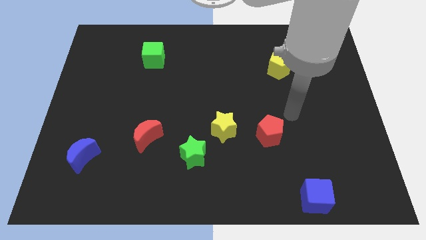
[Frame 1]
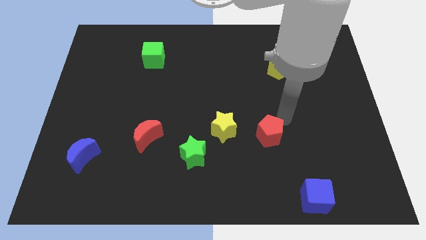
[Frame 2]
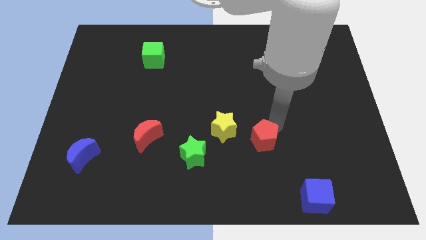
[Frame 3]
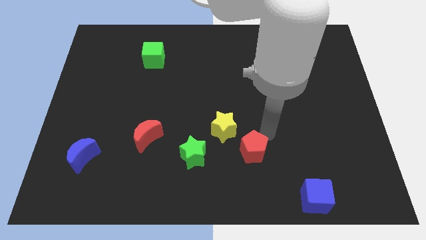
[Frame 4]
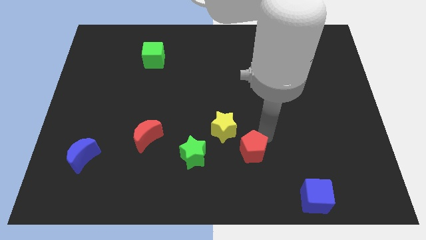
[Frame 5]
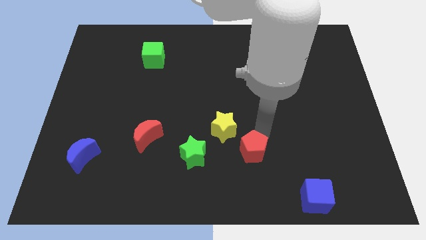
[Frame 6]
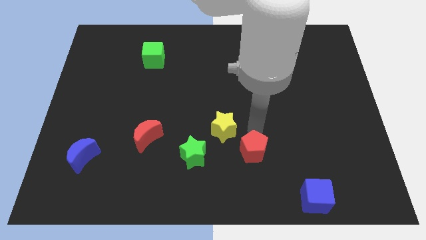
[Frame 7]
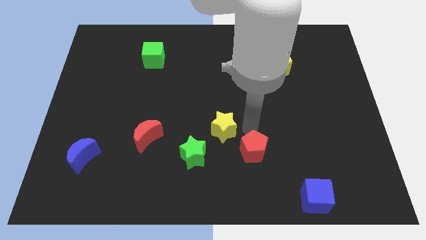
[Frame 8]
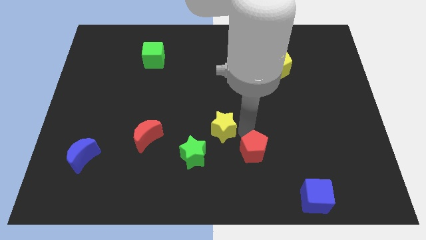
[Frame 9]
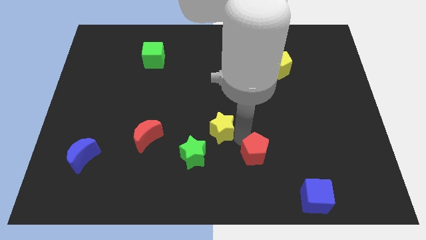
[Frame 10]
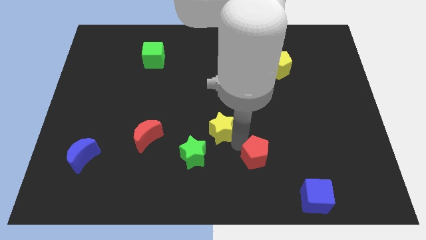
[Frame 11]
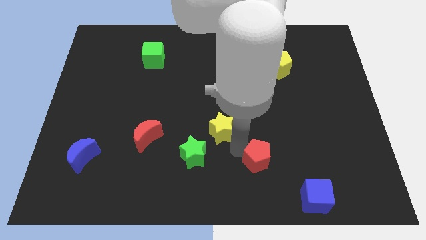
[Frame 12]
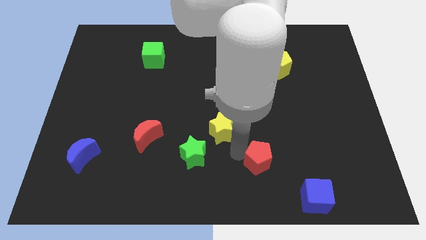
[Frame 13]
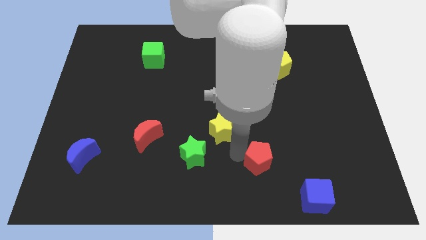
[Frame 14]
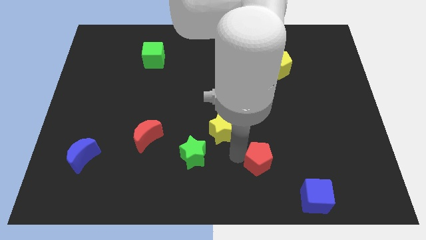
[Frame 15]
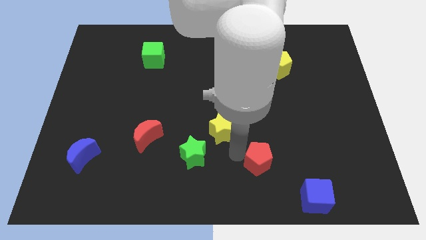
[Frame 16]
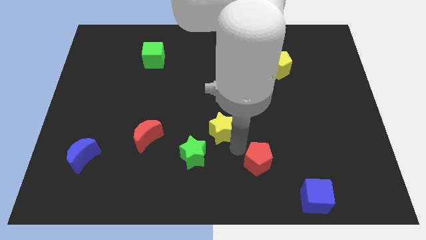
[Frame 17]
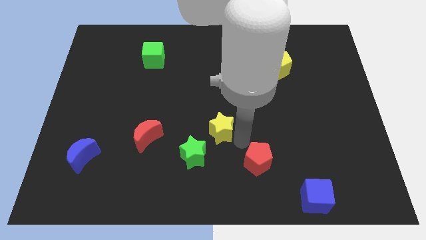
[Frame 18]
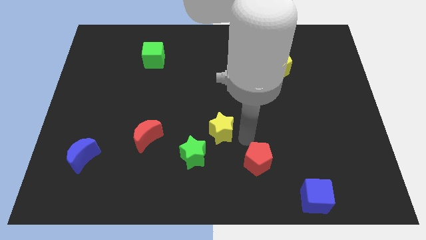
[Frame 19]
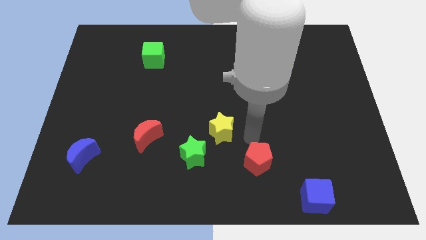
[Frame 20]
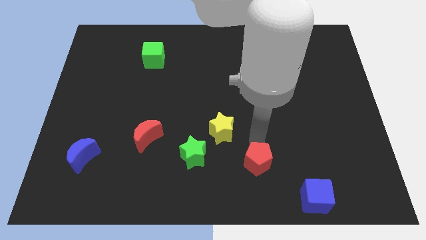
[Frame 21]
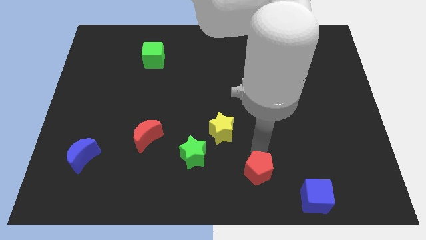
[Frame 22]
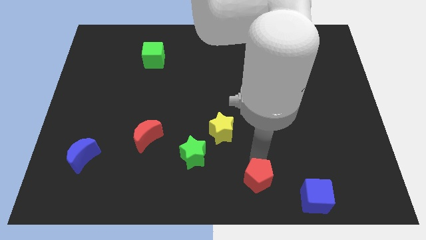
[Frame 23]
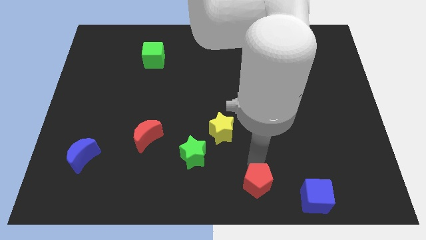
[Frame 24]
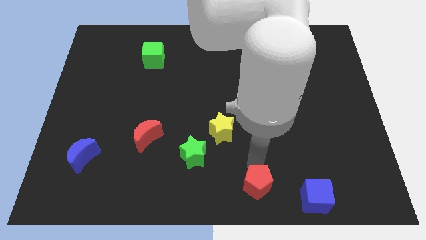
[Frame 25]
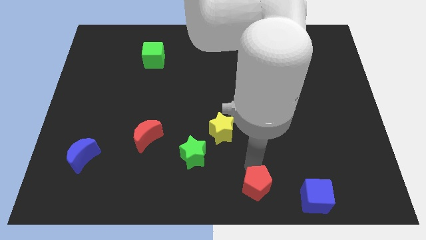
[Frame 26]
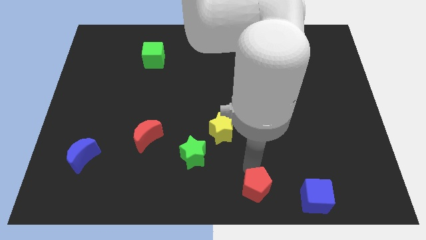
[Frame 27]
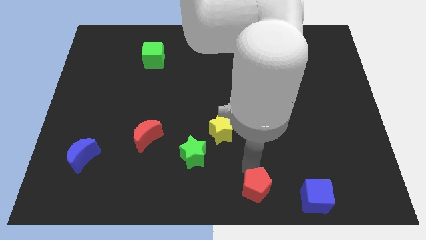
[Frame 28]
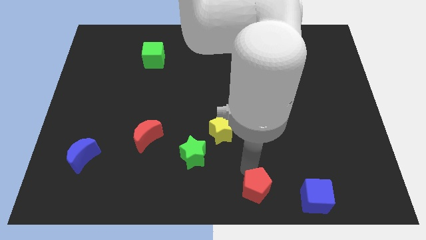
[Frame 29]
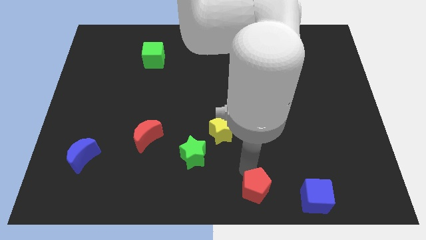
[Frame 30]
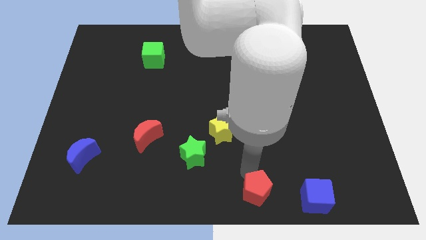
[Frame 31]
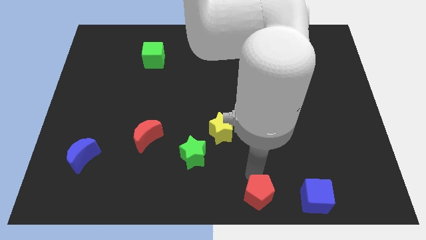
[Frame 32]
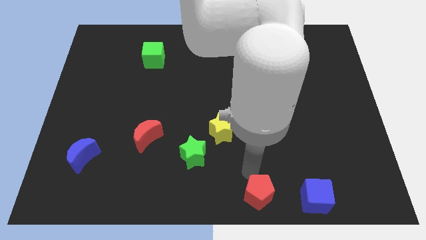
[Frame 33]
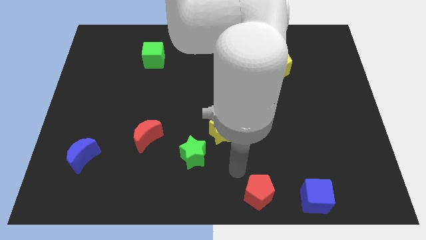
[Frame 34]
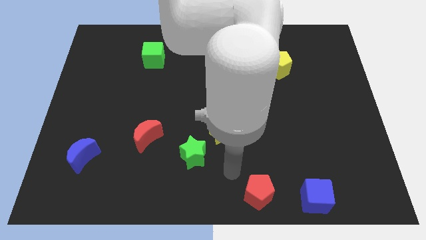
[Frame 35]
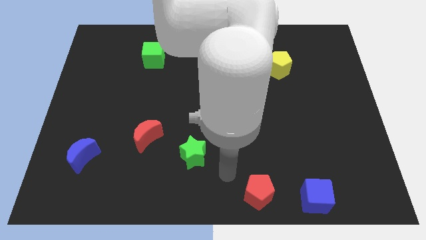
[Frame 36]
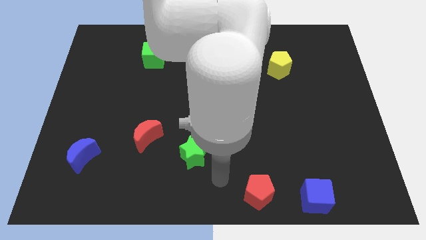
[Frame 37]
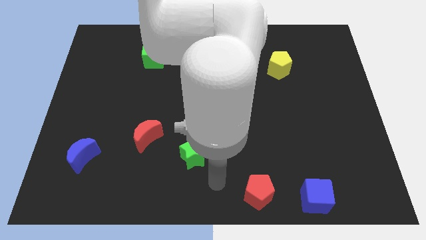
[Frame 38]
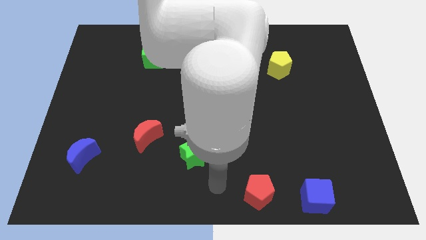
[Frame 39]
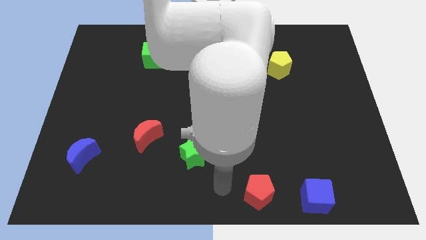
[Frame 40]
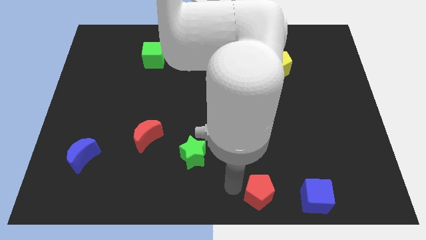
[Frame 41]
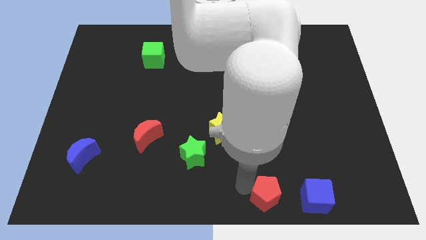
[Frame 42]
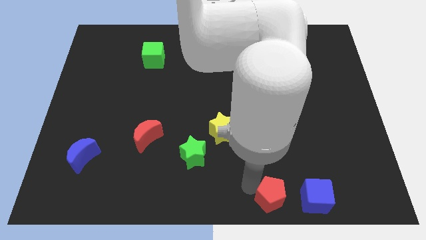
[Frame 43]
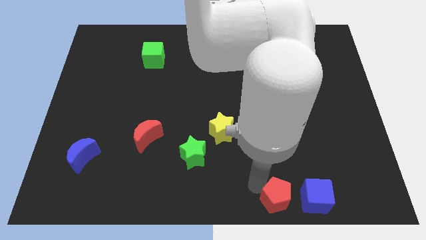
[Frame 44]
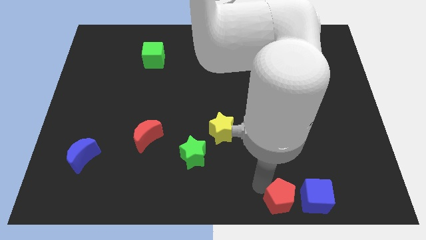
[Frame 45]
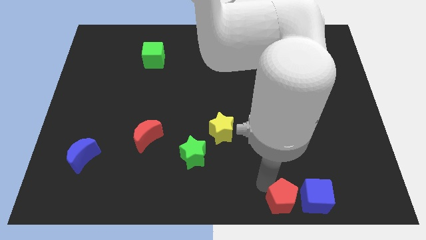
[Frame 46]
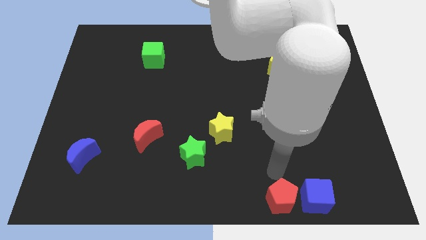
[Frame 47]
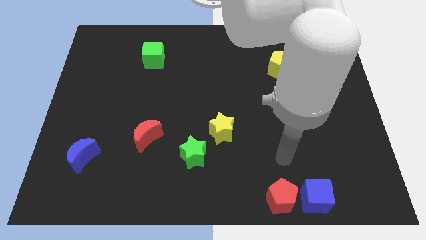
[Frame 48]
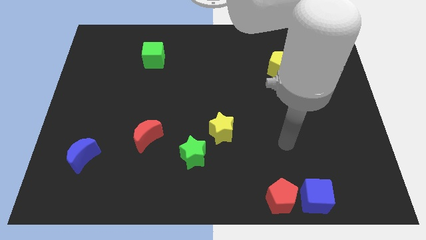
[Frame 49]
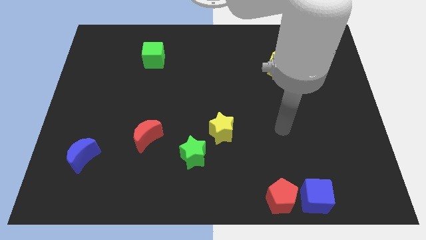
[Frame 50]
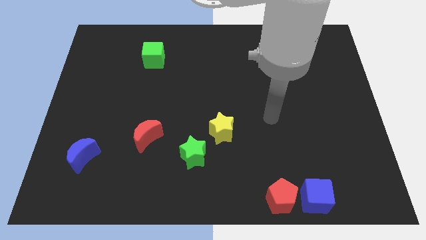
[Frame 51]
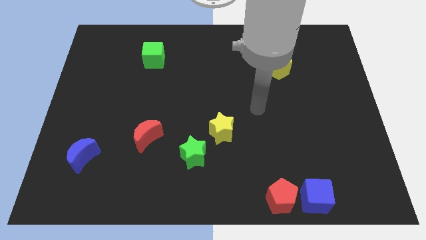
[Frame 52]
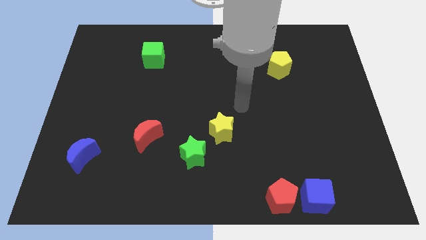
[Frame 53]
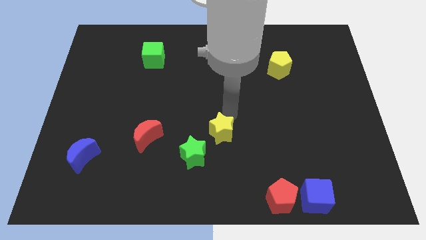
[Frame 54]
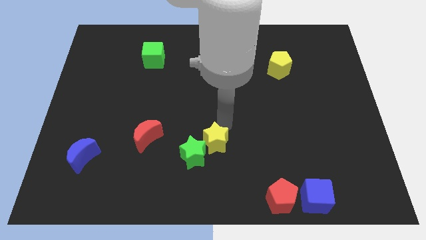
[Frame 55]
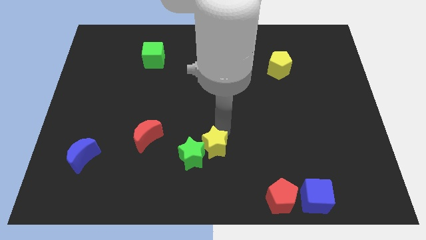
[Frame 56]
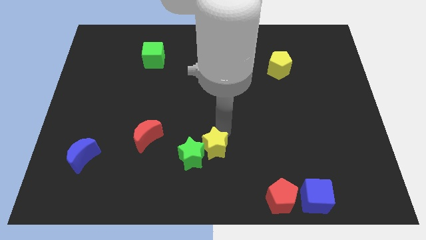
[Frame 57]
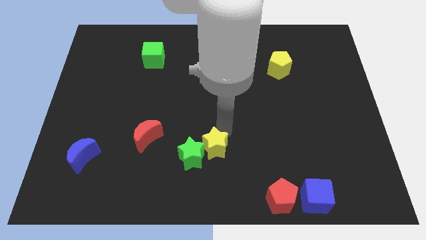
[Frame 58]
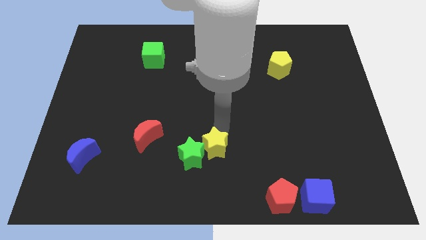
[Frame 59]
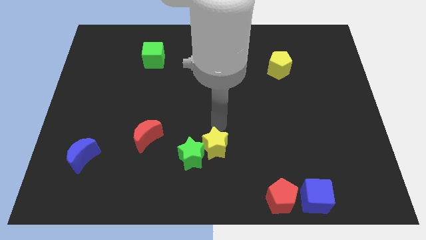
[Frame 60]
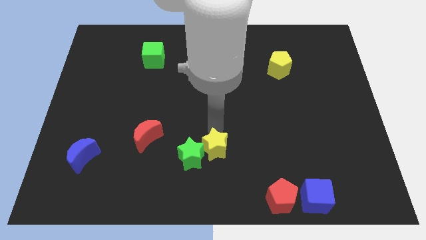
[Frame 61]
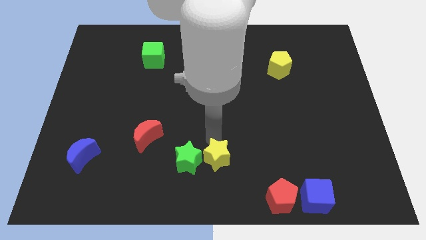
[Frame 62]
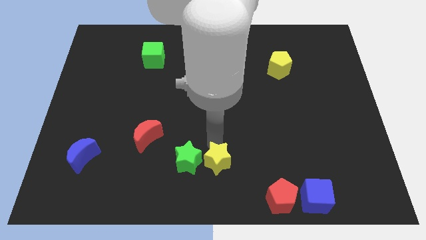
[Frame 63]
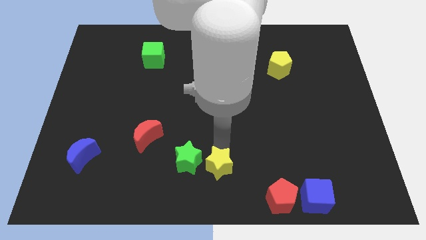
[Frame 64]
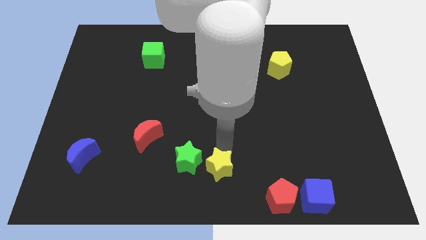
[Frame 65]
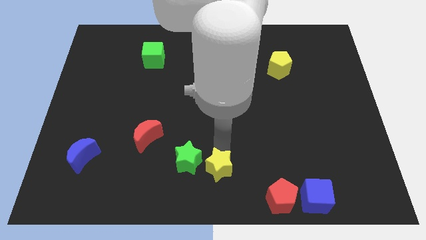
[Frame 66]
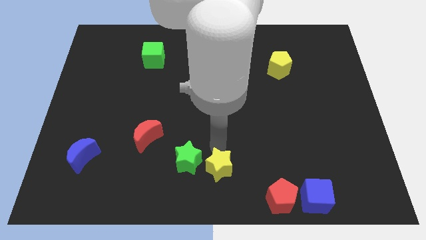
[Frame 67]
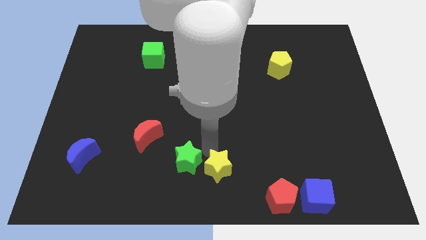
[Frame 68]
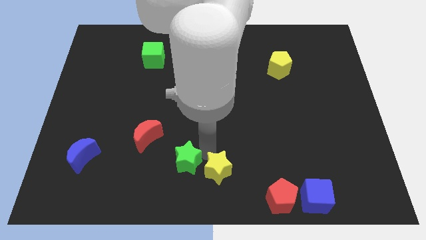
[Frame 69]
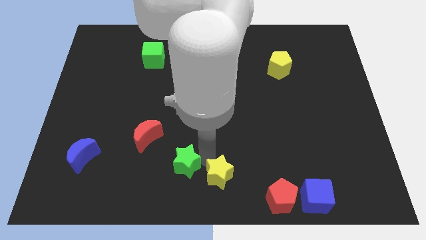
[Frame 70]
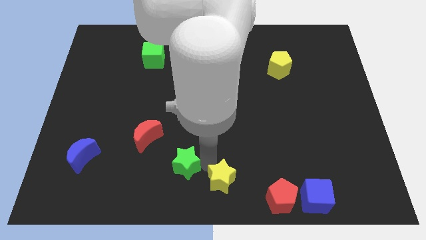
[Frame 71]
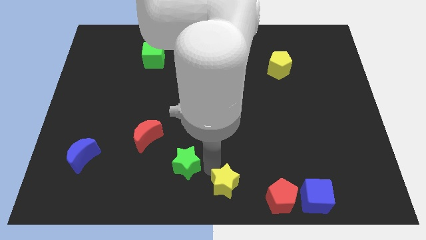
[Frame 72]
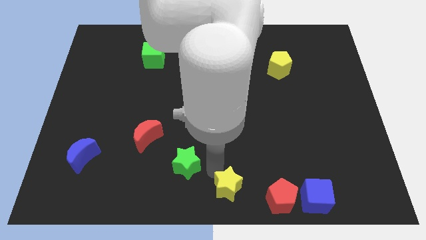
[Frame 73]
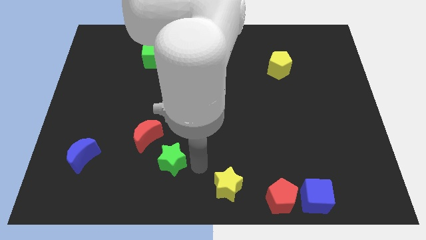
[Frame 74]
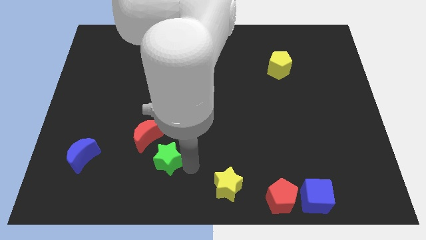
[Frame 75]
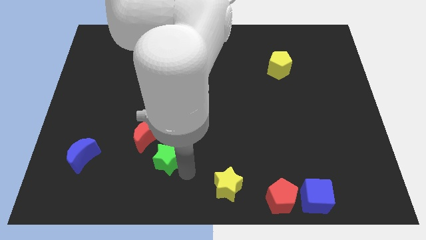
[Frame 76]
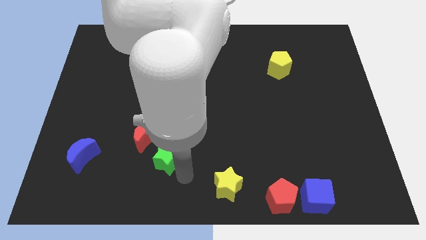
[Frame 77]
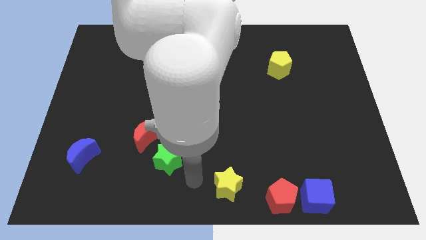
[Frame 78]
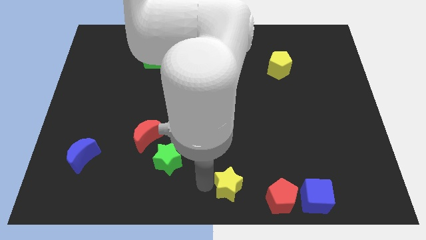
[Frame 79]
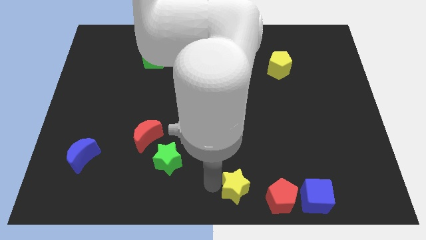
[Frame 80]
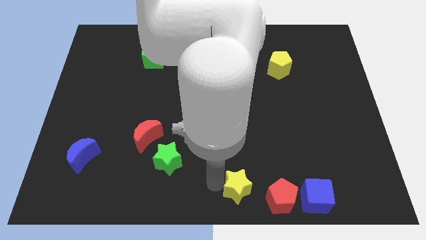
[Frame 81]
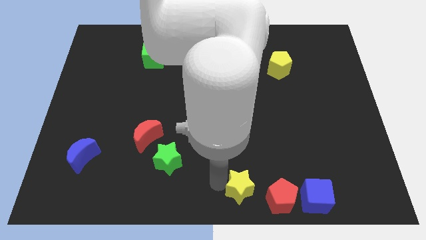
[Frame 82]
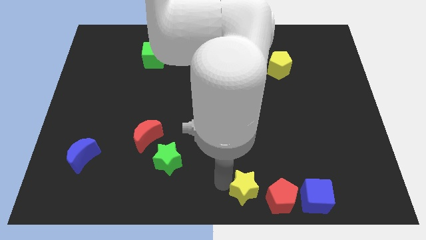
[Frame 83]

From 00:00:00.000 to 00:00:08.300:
move the red pentagon and yellow star towards the bottom center of the board

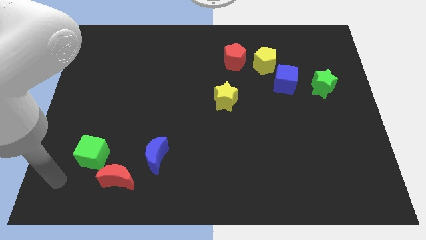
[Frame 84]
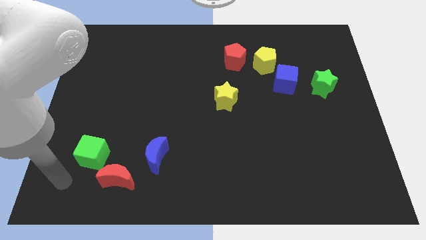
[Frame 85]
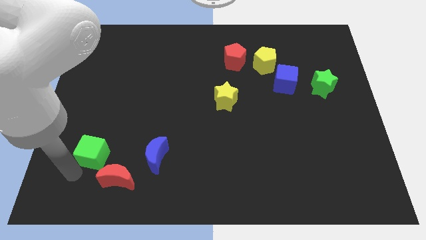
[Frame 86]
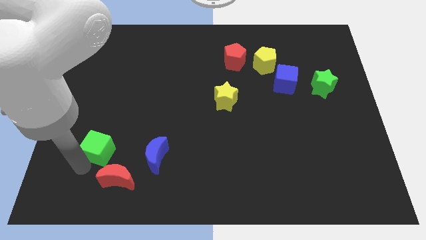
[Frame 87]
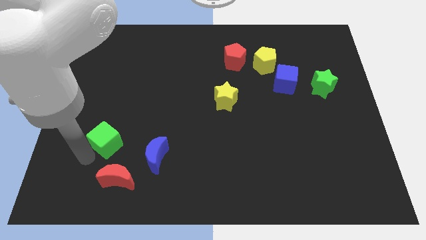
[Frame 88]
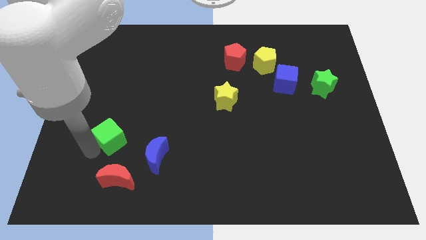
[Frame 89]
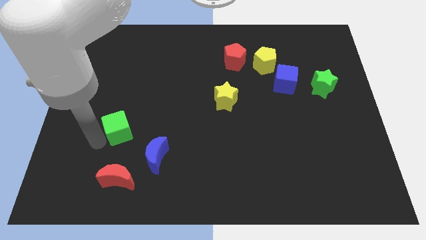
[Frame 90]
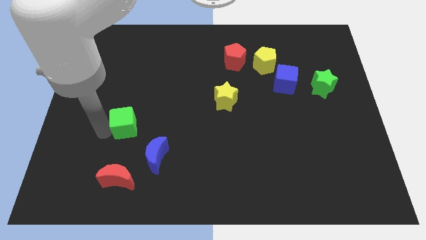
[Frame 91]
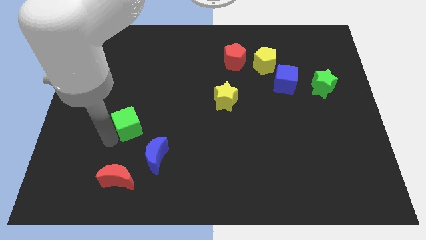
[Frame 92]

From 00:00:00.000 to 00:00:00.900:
move the green cube to the top of the board
